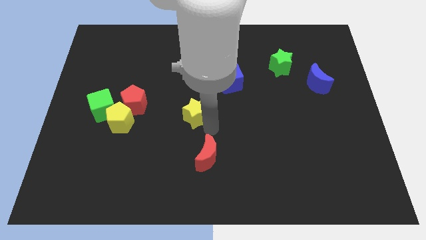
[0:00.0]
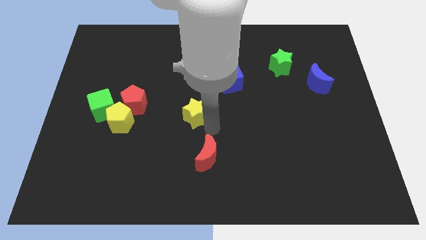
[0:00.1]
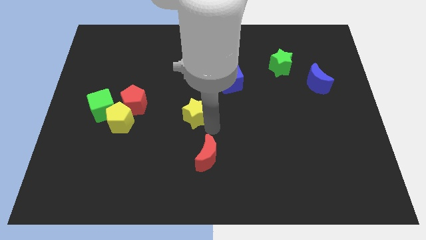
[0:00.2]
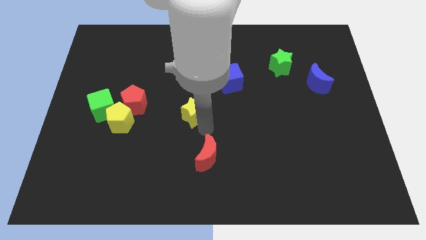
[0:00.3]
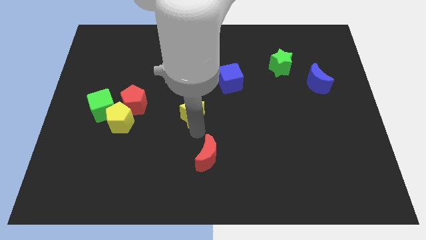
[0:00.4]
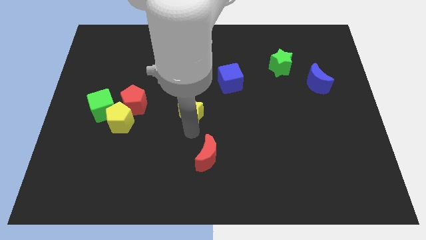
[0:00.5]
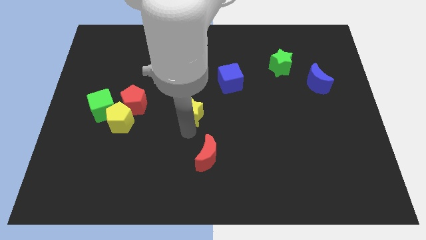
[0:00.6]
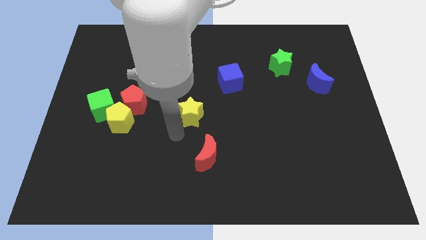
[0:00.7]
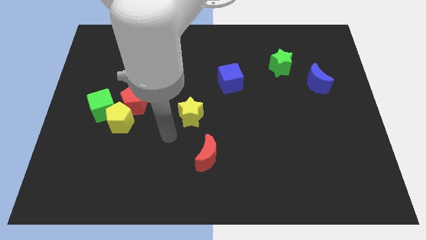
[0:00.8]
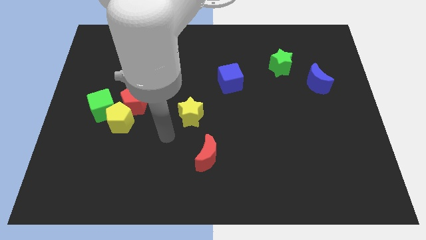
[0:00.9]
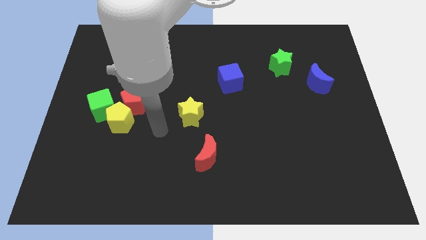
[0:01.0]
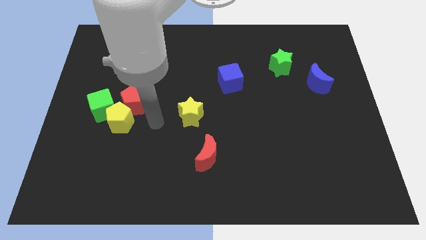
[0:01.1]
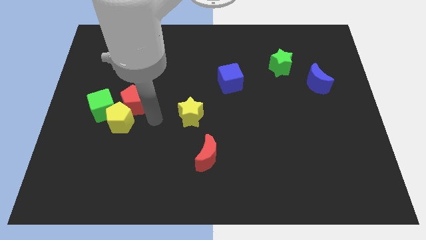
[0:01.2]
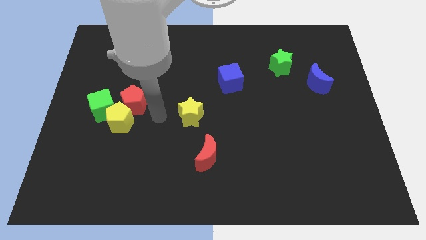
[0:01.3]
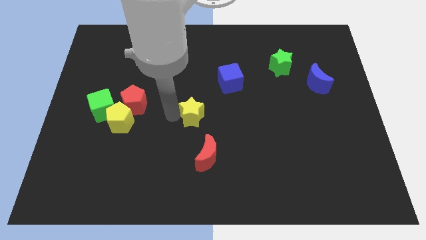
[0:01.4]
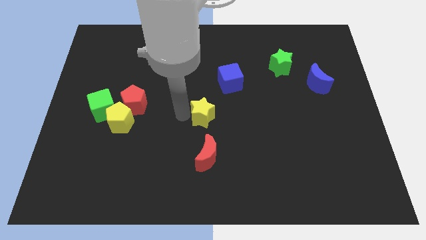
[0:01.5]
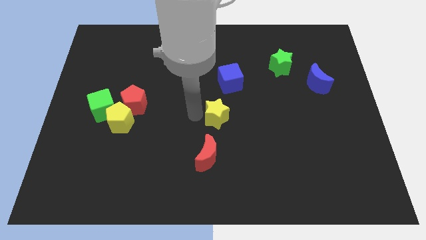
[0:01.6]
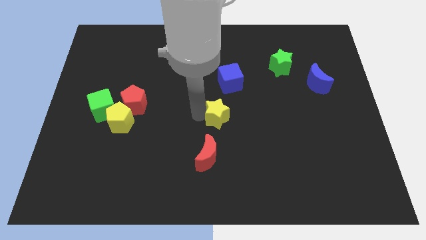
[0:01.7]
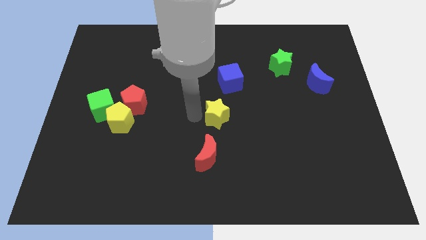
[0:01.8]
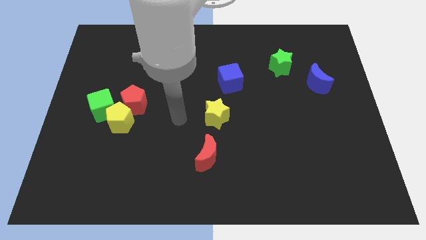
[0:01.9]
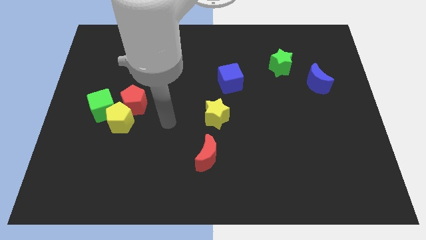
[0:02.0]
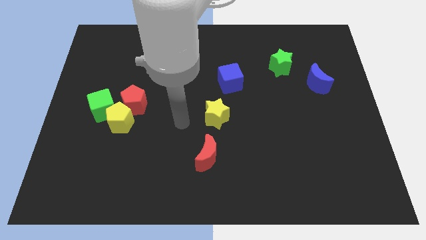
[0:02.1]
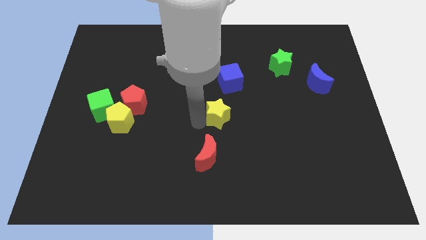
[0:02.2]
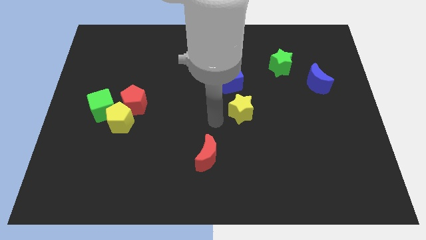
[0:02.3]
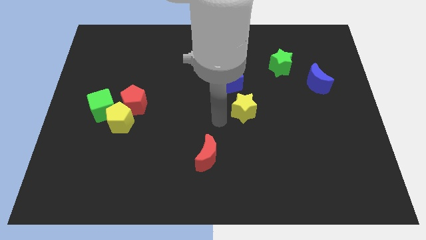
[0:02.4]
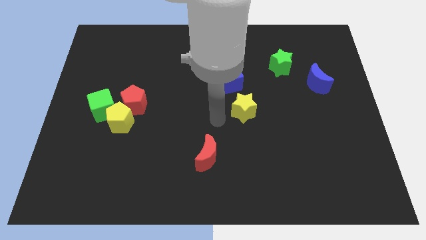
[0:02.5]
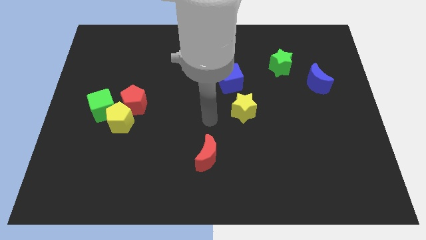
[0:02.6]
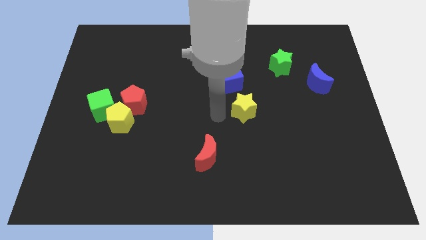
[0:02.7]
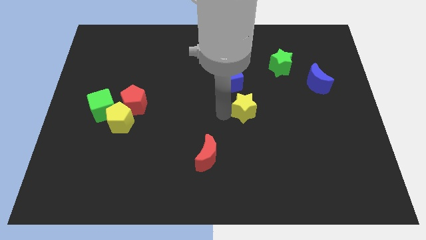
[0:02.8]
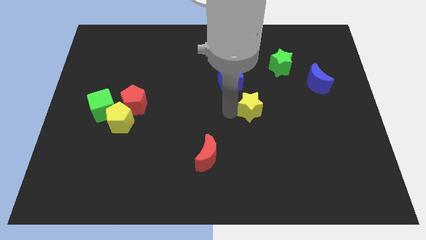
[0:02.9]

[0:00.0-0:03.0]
move the yellow star below the blue cube

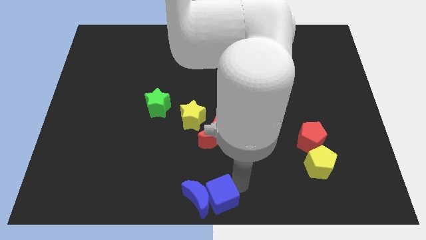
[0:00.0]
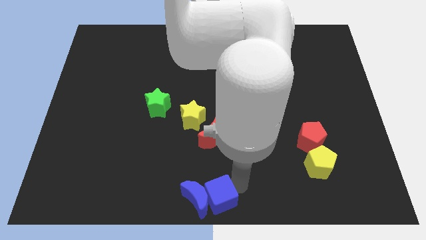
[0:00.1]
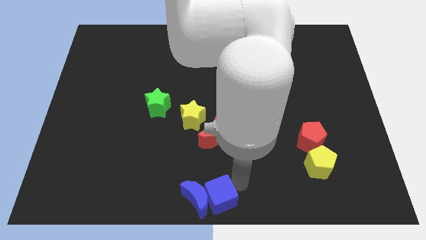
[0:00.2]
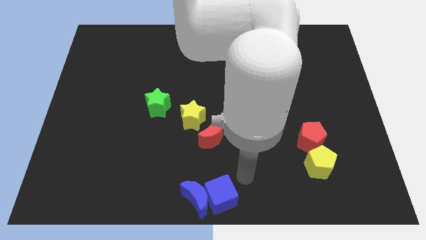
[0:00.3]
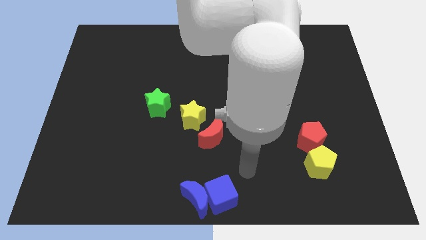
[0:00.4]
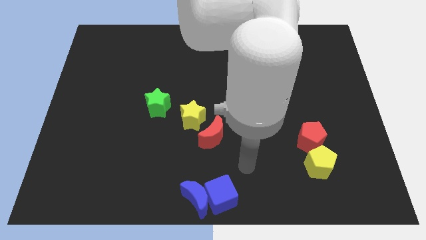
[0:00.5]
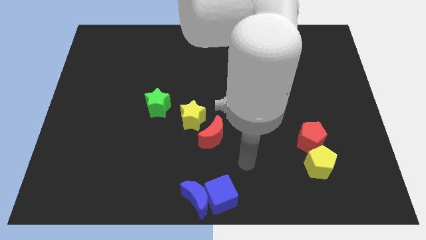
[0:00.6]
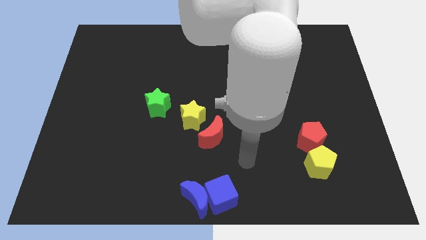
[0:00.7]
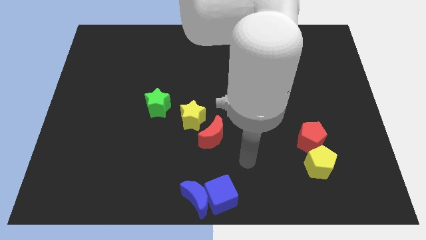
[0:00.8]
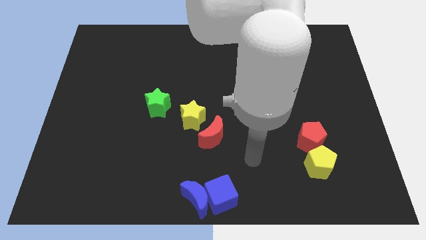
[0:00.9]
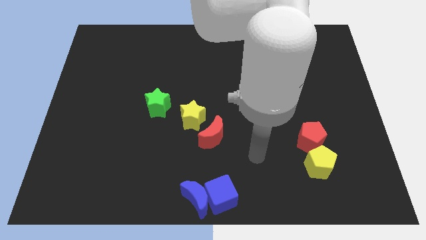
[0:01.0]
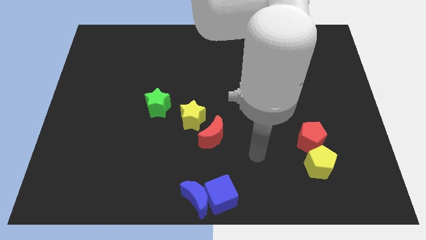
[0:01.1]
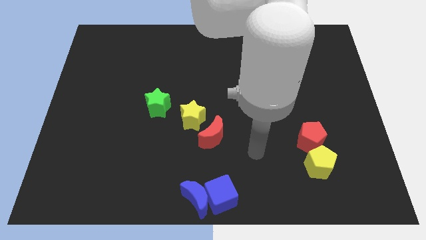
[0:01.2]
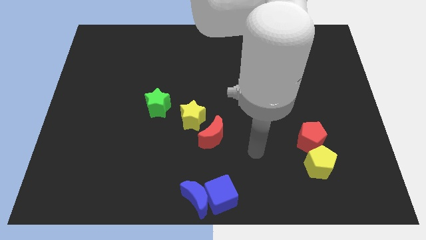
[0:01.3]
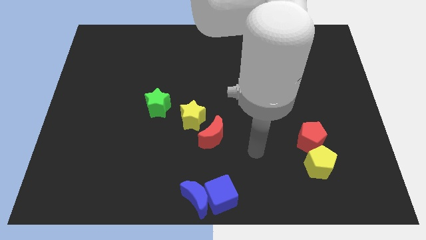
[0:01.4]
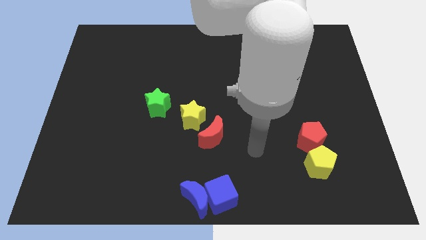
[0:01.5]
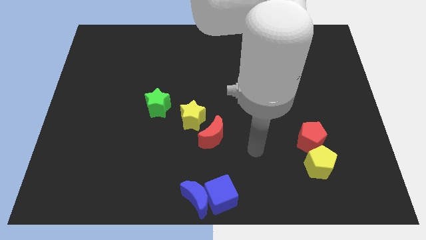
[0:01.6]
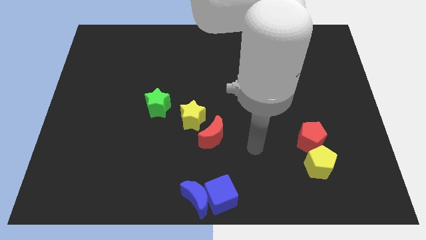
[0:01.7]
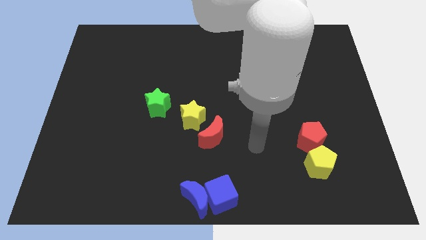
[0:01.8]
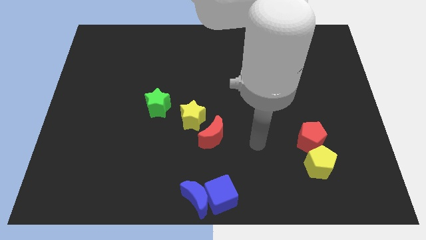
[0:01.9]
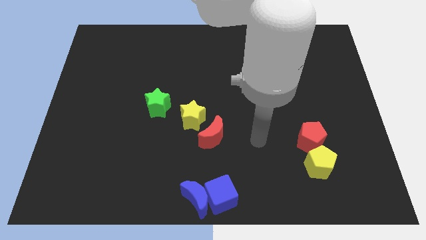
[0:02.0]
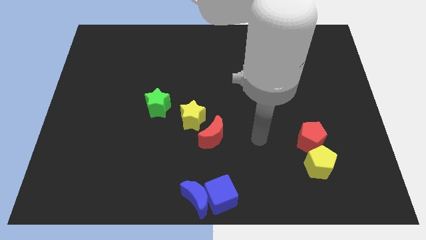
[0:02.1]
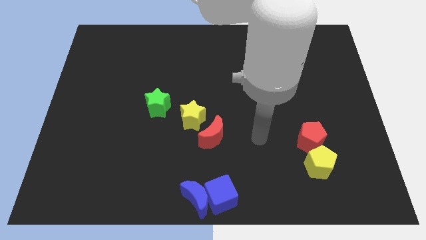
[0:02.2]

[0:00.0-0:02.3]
go away from the blue cube

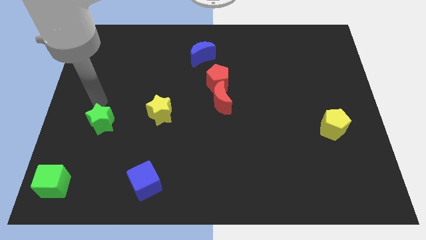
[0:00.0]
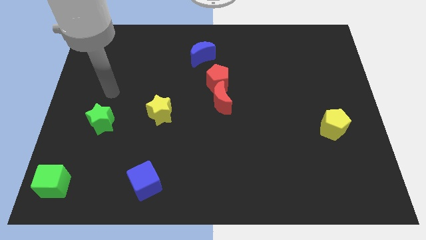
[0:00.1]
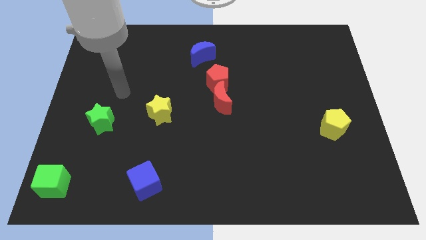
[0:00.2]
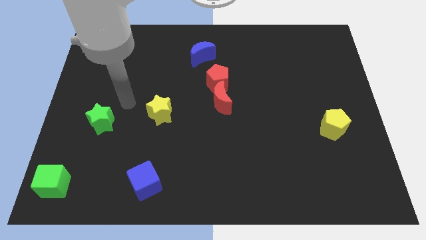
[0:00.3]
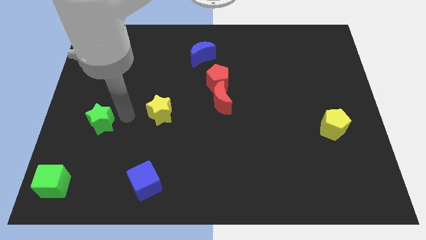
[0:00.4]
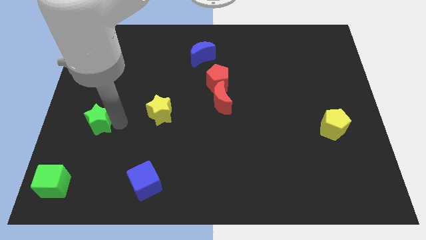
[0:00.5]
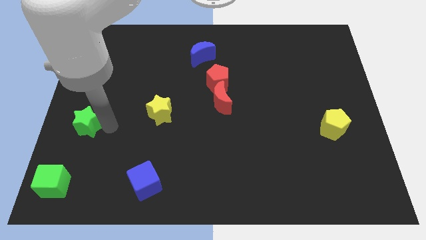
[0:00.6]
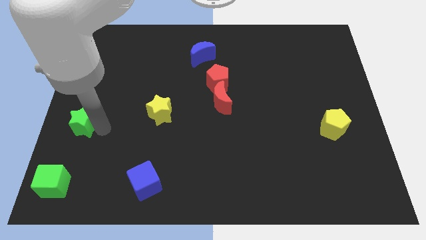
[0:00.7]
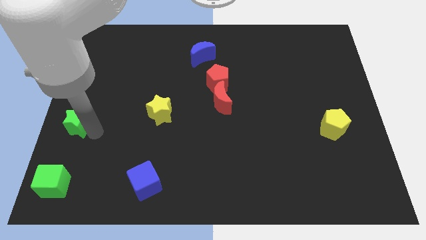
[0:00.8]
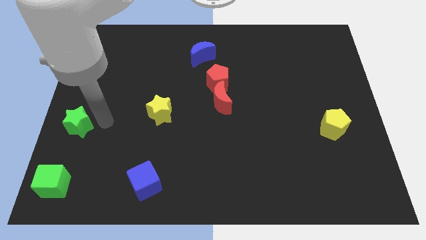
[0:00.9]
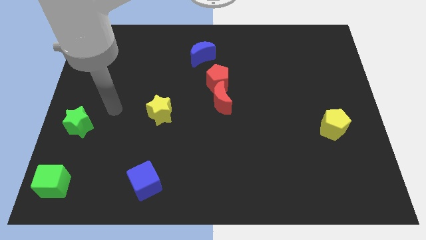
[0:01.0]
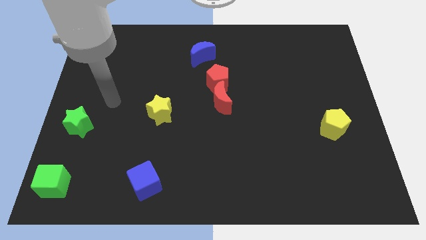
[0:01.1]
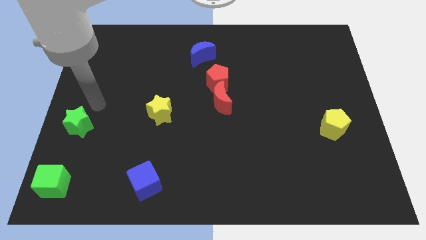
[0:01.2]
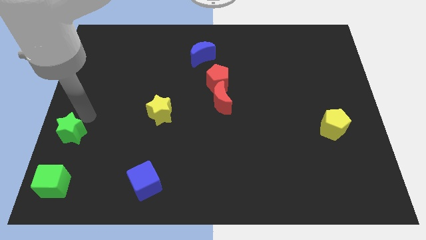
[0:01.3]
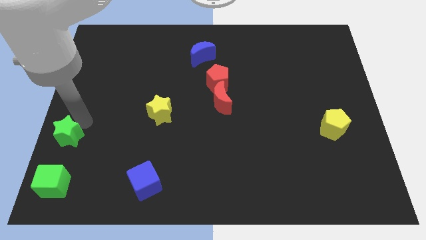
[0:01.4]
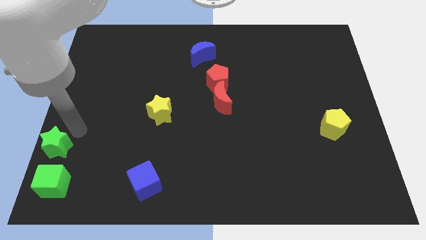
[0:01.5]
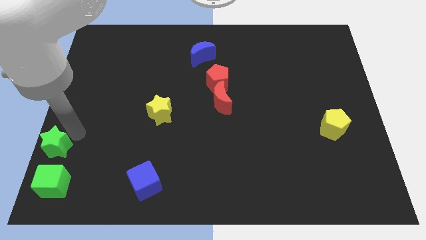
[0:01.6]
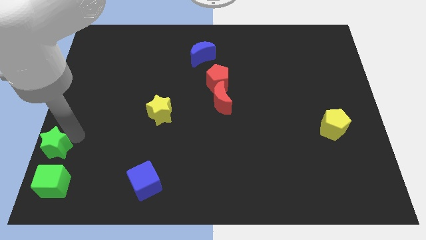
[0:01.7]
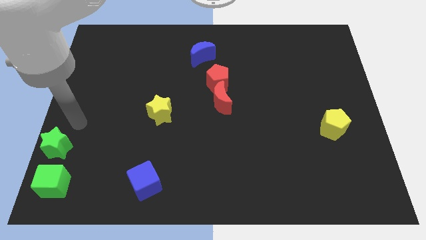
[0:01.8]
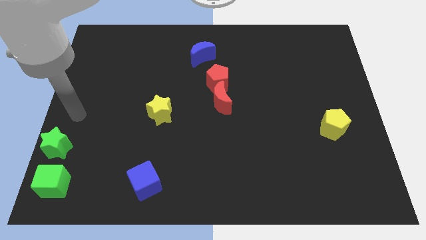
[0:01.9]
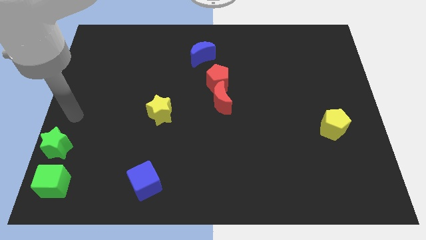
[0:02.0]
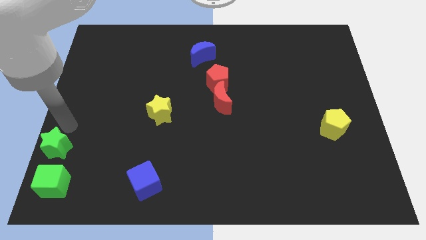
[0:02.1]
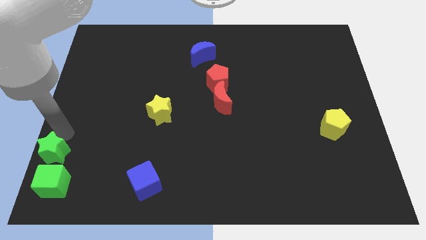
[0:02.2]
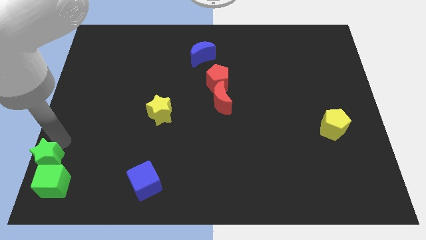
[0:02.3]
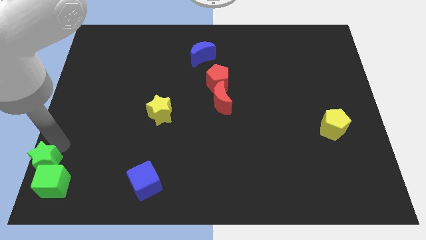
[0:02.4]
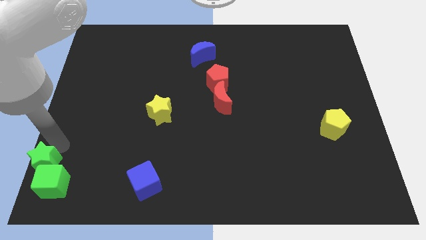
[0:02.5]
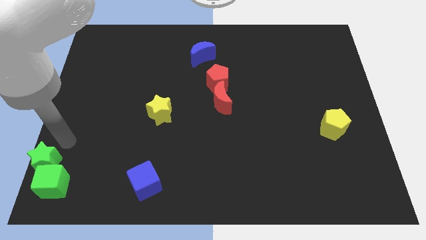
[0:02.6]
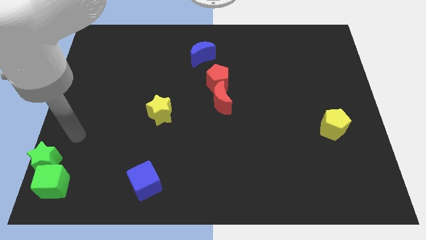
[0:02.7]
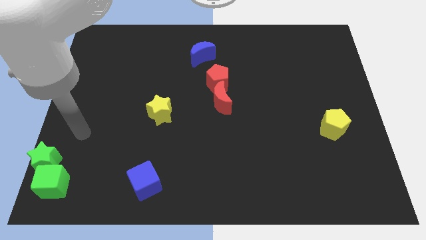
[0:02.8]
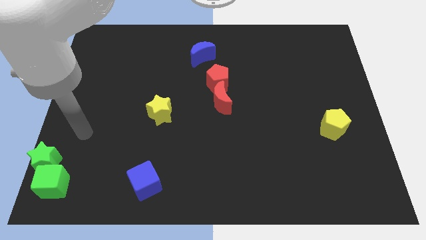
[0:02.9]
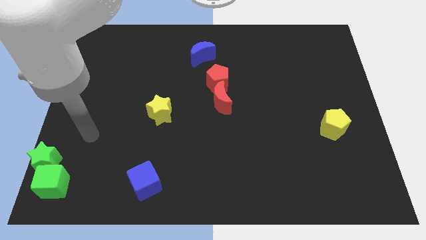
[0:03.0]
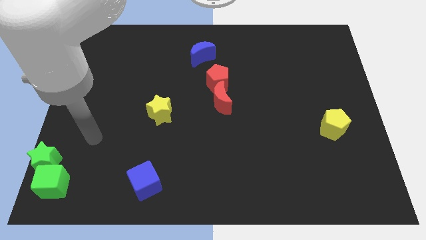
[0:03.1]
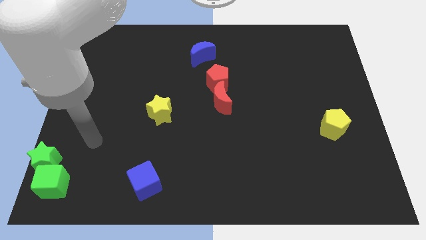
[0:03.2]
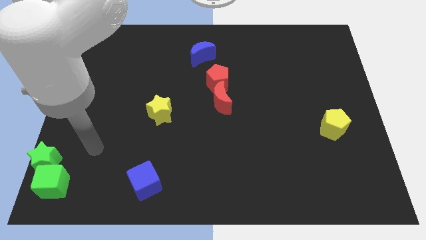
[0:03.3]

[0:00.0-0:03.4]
push the green star into the green cube

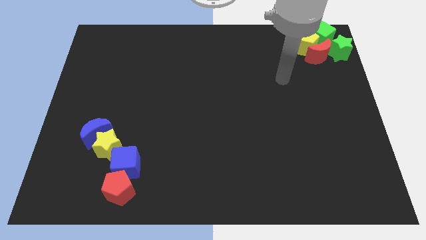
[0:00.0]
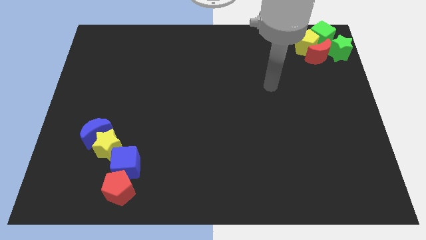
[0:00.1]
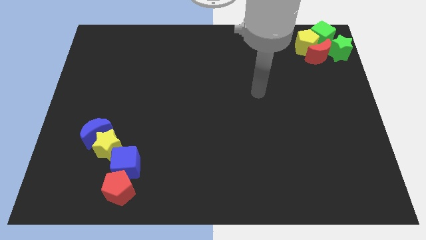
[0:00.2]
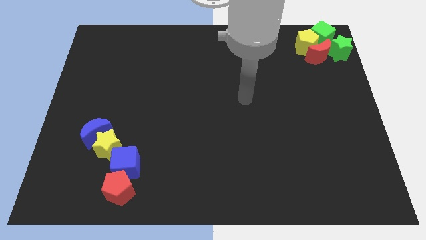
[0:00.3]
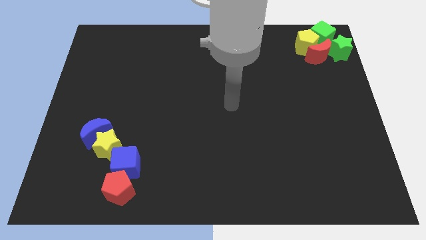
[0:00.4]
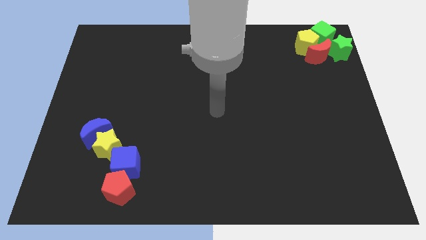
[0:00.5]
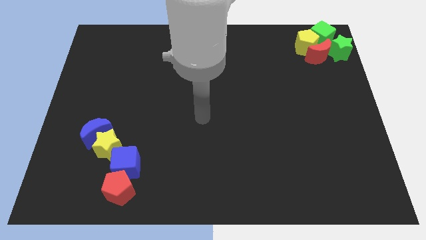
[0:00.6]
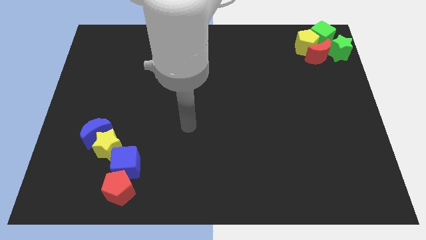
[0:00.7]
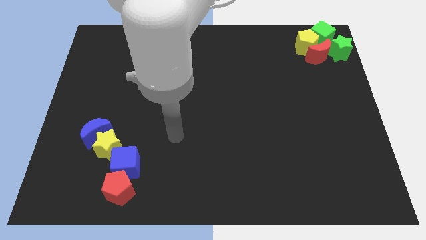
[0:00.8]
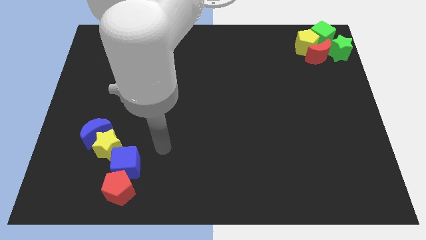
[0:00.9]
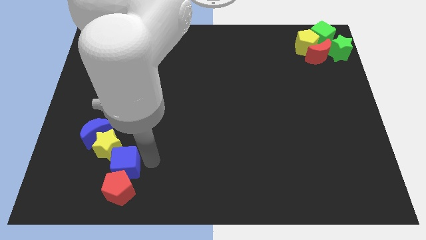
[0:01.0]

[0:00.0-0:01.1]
point your arm at the right of the blue cube
